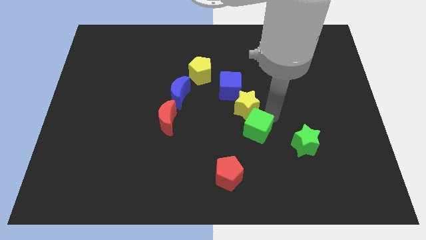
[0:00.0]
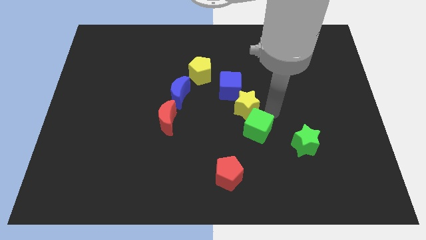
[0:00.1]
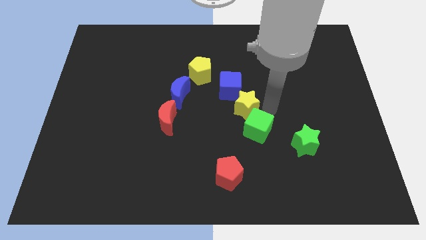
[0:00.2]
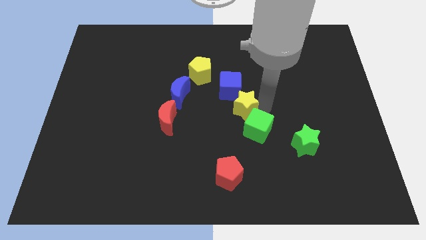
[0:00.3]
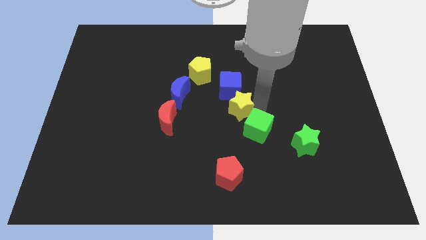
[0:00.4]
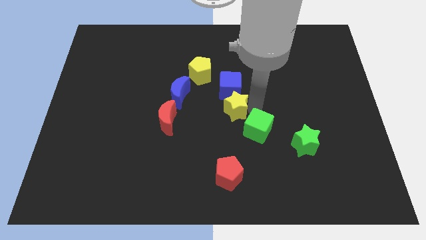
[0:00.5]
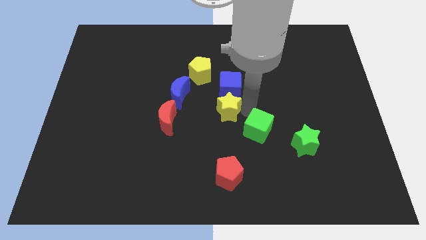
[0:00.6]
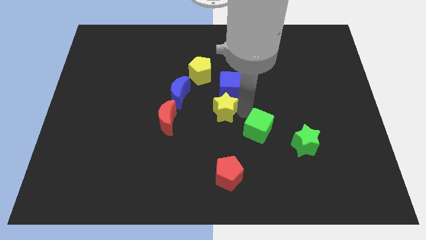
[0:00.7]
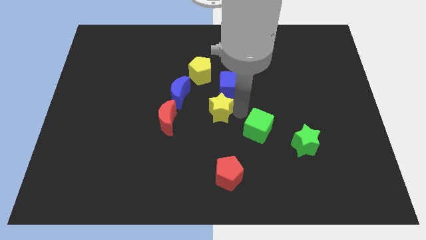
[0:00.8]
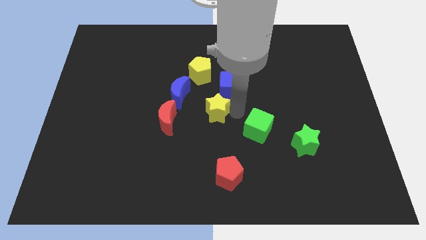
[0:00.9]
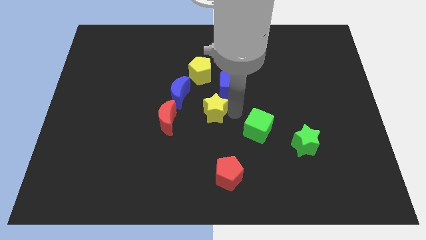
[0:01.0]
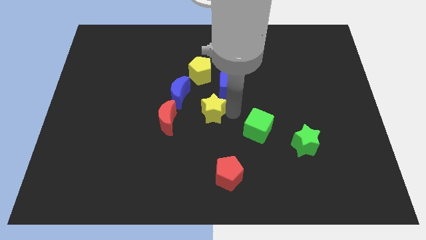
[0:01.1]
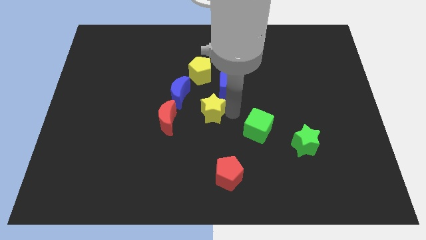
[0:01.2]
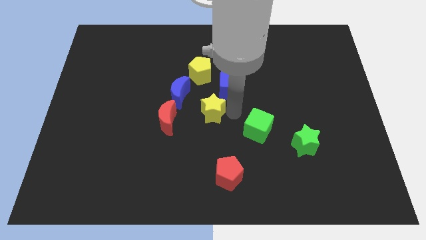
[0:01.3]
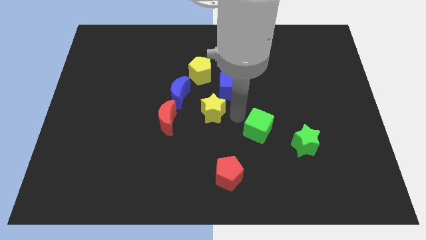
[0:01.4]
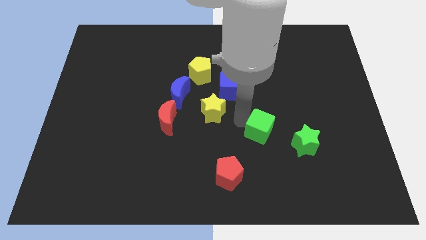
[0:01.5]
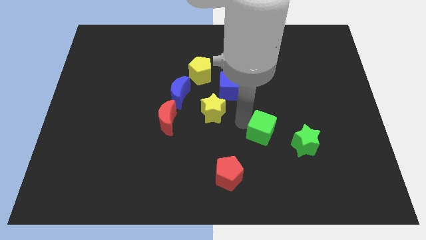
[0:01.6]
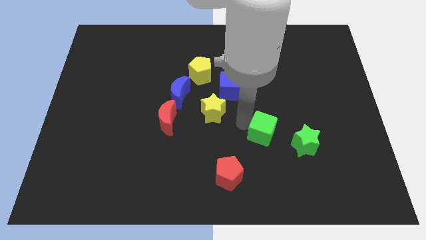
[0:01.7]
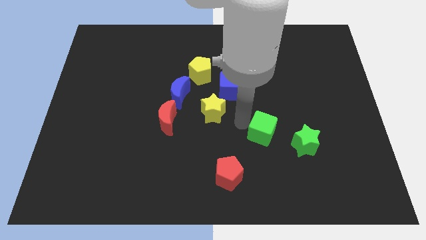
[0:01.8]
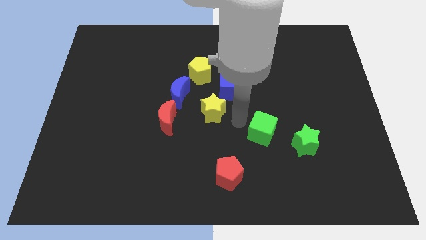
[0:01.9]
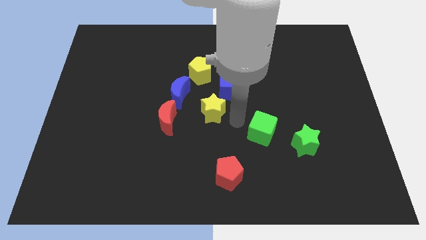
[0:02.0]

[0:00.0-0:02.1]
push yellow star into the center of the board

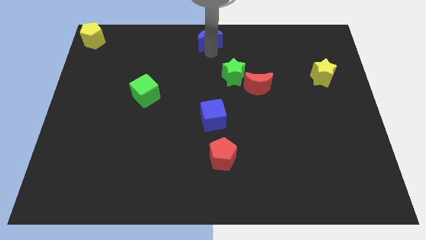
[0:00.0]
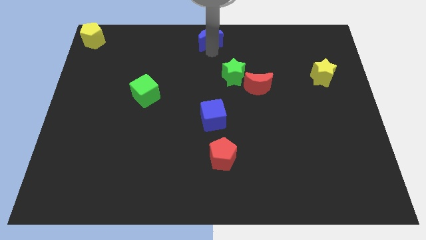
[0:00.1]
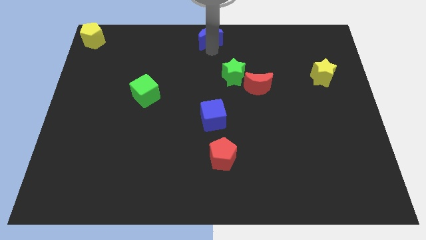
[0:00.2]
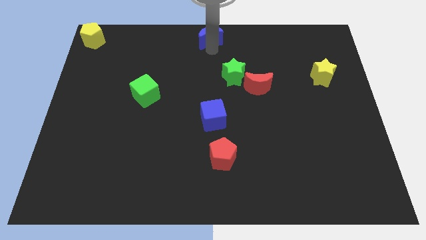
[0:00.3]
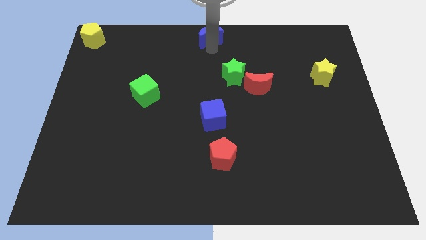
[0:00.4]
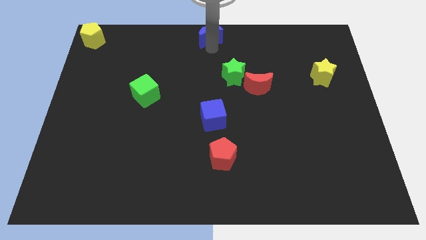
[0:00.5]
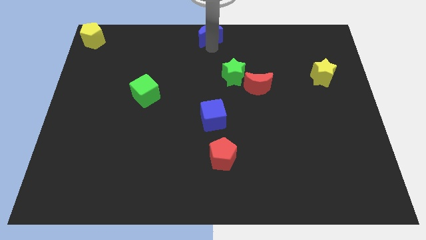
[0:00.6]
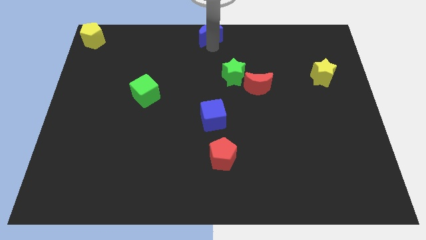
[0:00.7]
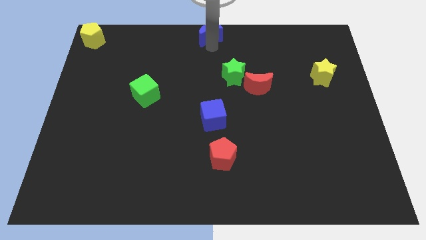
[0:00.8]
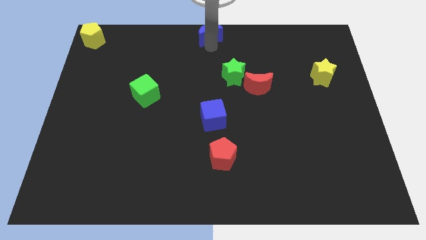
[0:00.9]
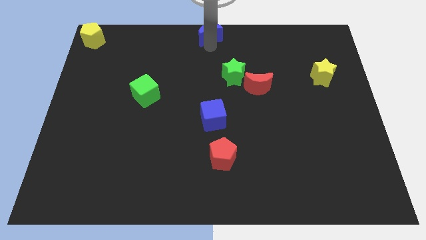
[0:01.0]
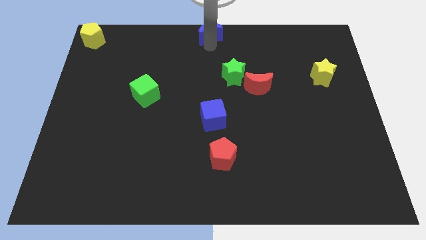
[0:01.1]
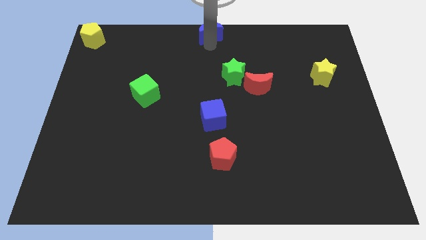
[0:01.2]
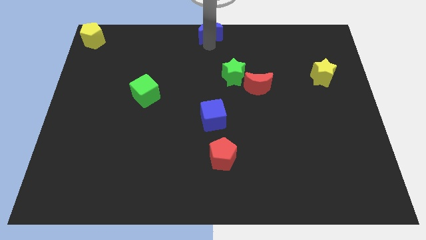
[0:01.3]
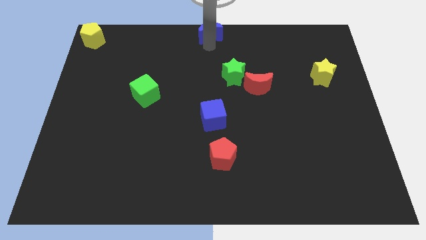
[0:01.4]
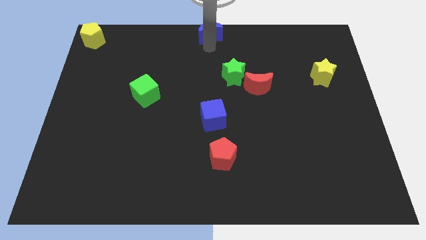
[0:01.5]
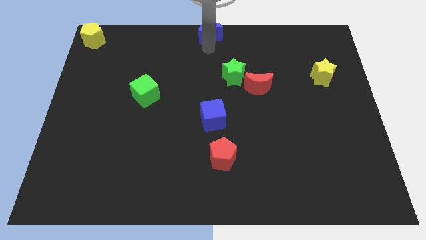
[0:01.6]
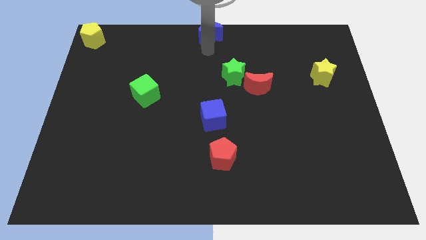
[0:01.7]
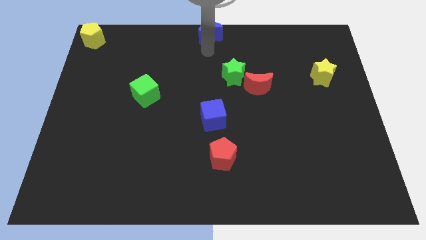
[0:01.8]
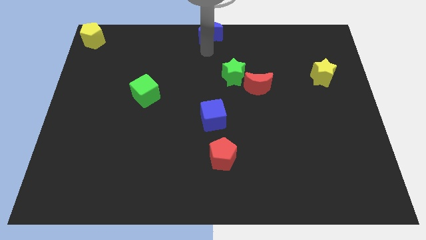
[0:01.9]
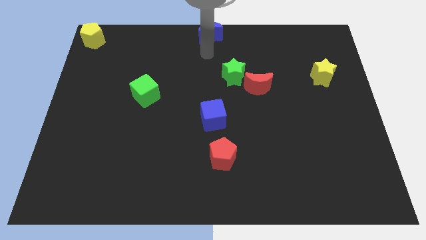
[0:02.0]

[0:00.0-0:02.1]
slightly push the blue crescent towards the top center of the board

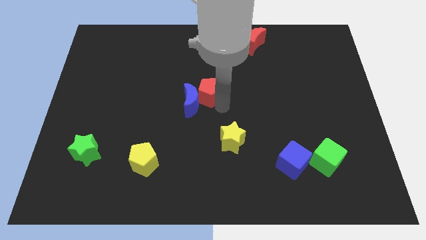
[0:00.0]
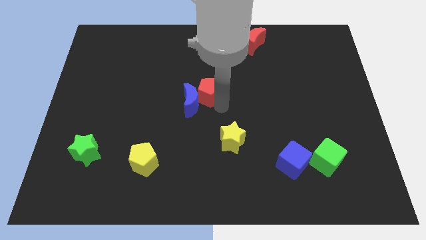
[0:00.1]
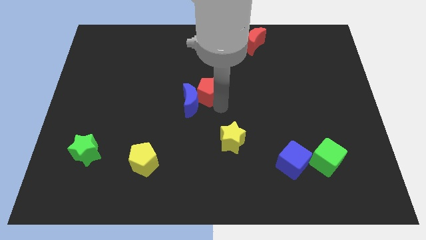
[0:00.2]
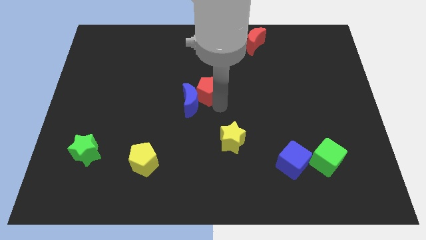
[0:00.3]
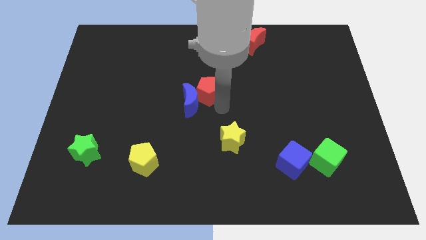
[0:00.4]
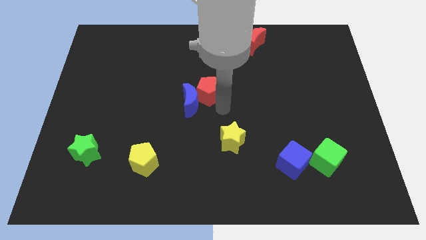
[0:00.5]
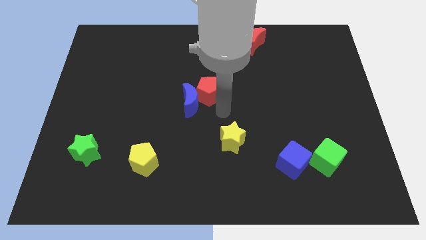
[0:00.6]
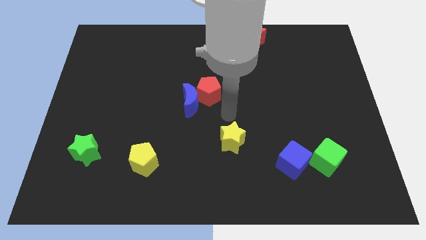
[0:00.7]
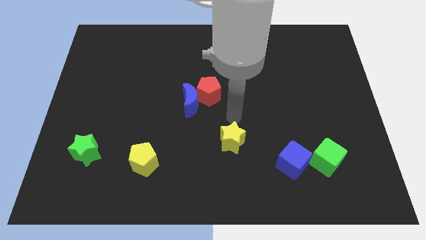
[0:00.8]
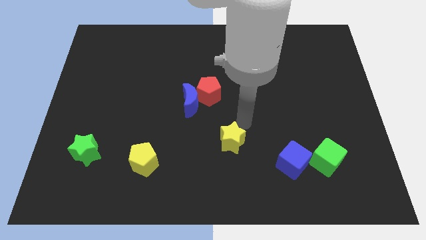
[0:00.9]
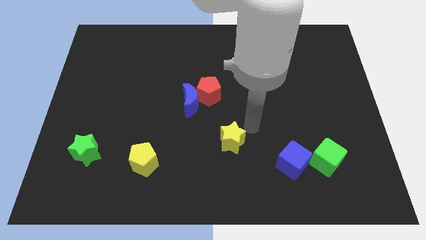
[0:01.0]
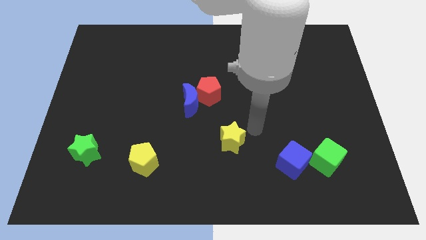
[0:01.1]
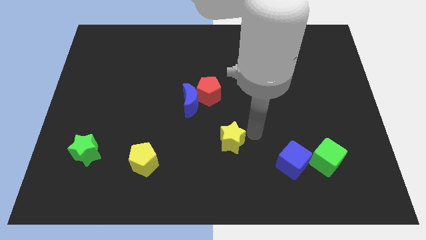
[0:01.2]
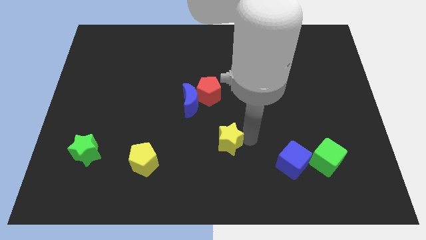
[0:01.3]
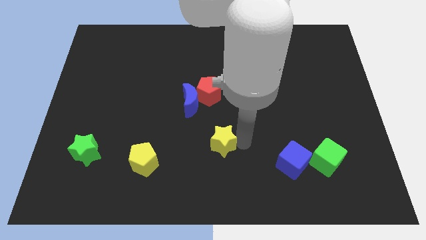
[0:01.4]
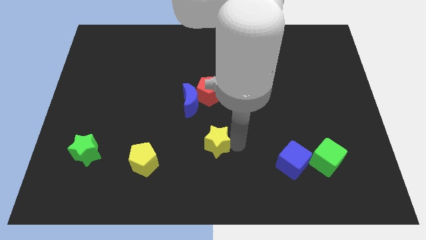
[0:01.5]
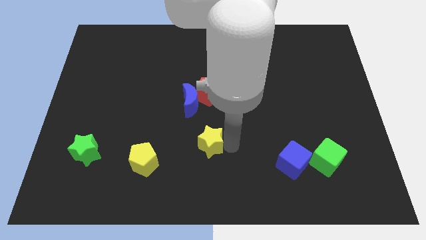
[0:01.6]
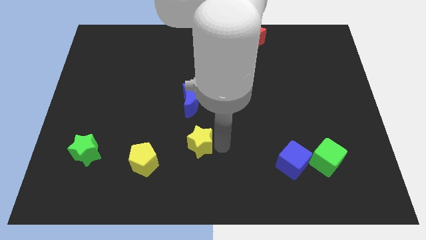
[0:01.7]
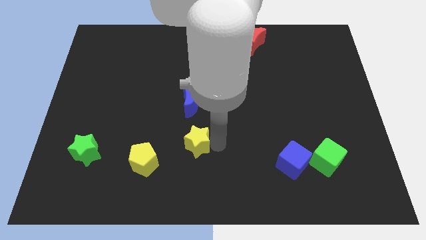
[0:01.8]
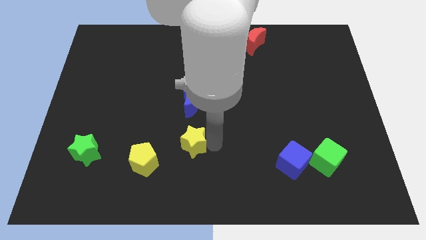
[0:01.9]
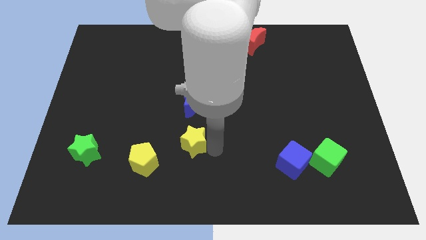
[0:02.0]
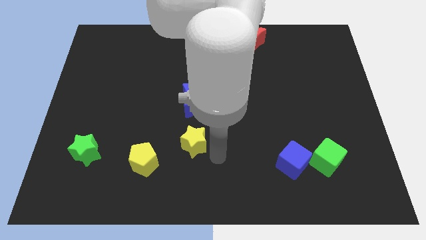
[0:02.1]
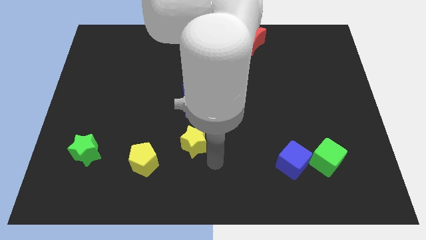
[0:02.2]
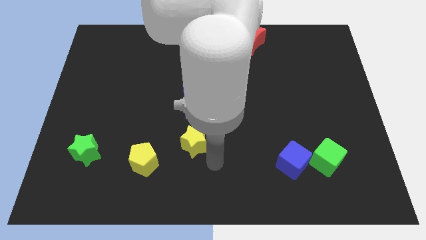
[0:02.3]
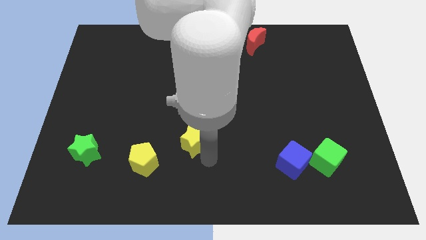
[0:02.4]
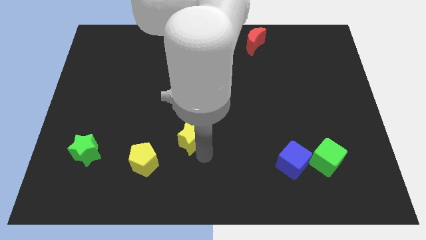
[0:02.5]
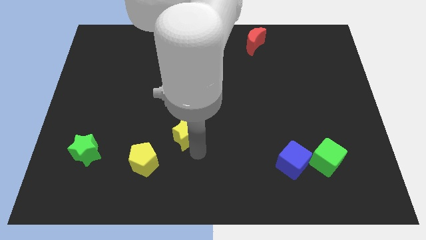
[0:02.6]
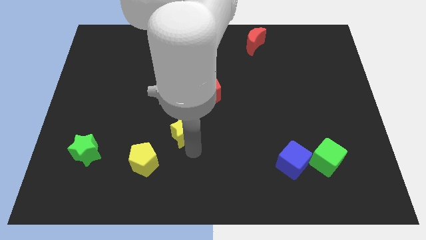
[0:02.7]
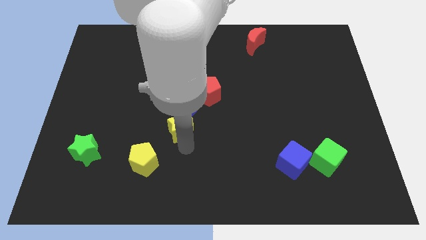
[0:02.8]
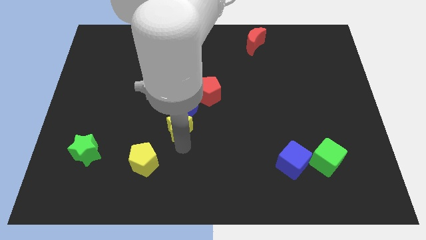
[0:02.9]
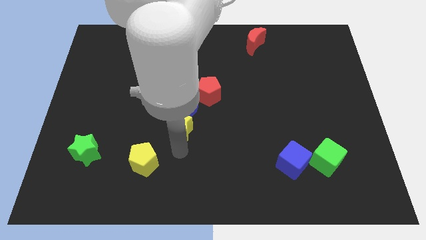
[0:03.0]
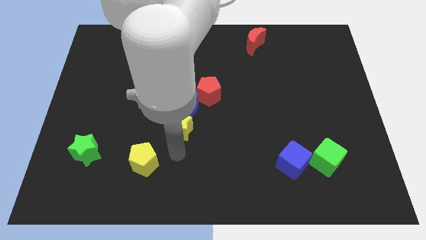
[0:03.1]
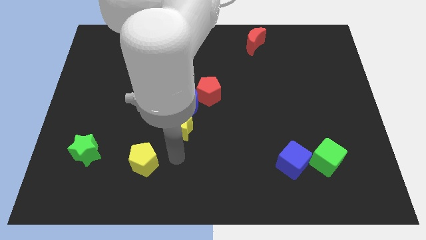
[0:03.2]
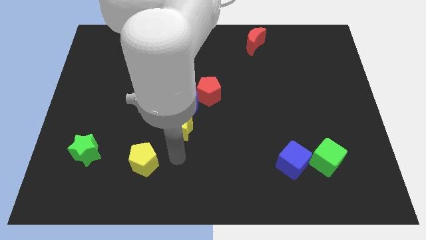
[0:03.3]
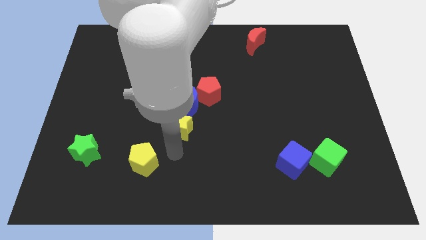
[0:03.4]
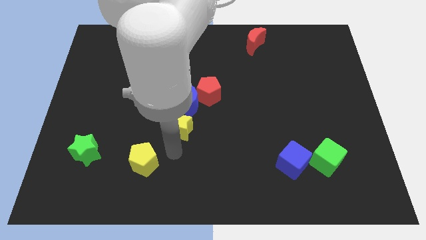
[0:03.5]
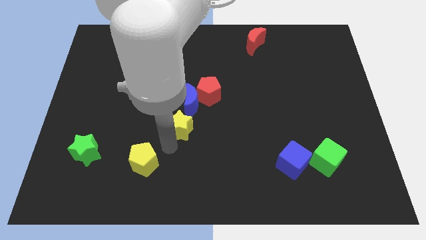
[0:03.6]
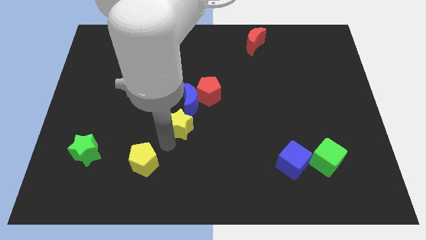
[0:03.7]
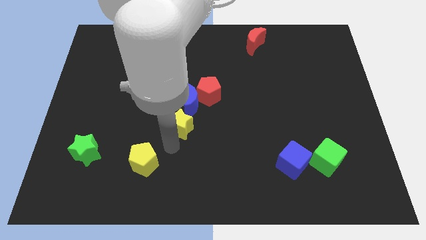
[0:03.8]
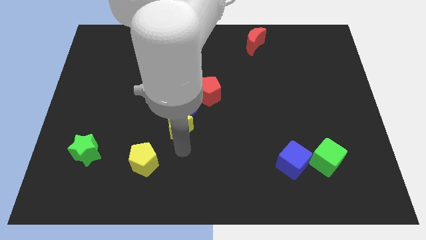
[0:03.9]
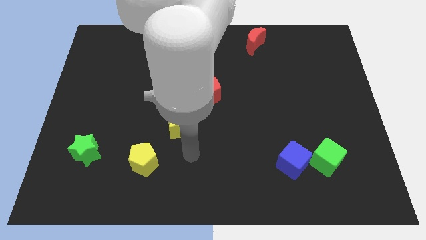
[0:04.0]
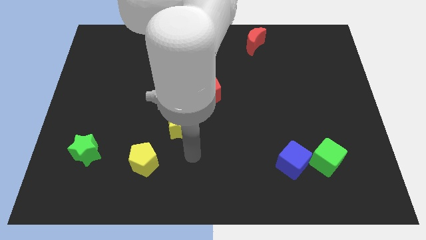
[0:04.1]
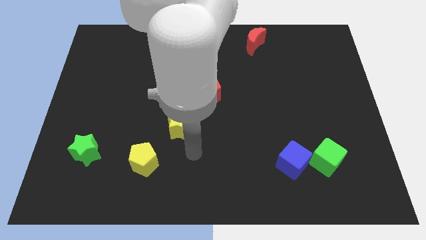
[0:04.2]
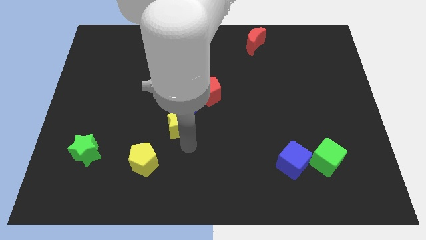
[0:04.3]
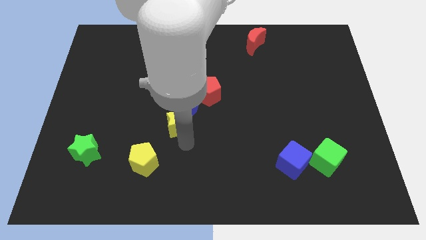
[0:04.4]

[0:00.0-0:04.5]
move the yellow star towards the bottom left of the blue crescent

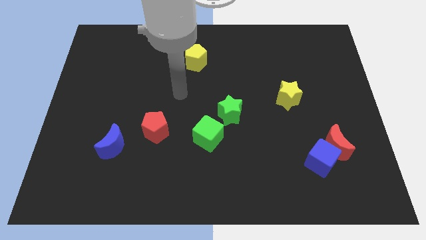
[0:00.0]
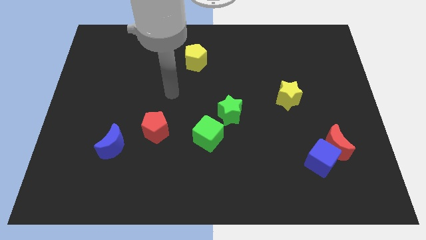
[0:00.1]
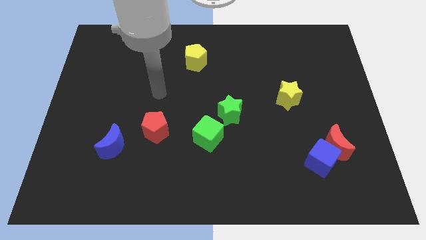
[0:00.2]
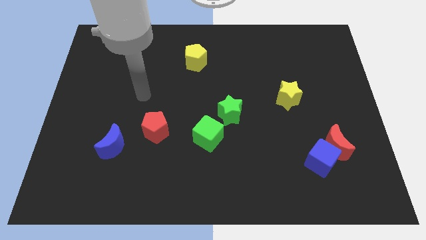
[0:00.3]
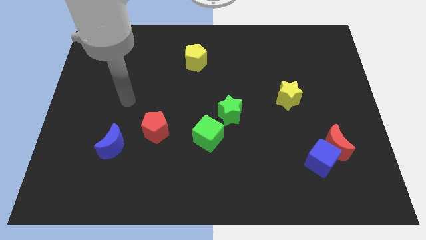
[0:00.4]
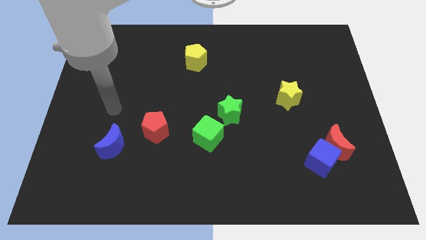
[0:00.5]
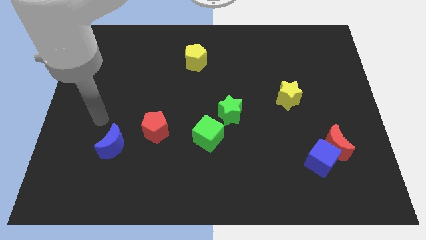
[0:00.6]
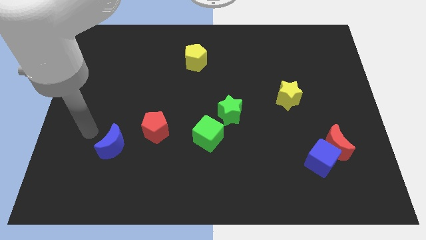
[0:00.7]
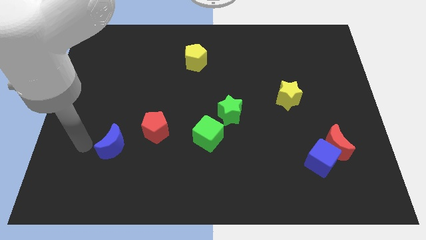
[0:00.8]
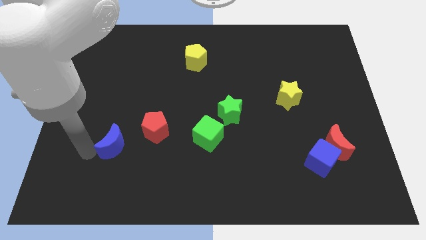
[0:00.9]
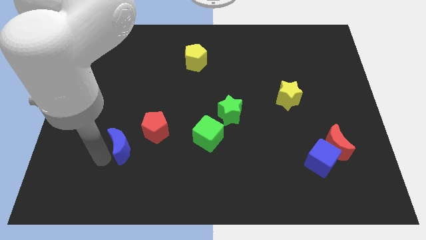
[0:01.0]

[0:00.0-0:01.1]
move your arm towards the blue crescent
